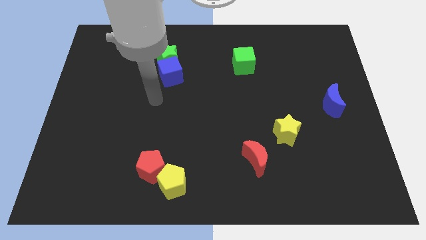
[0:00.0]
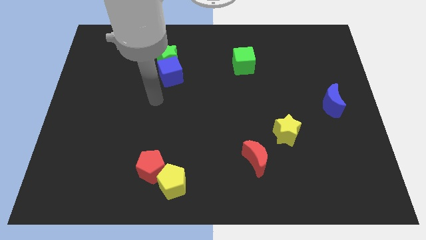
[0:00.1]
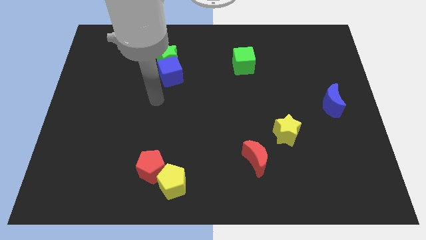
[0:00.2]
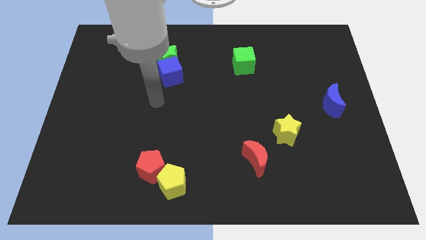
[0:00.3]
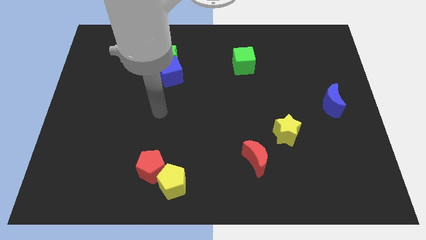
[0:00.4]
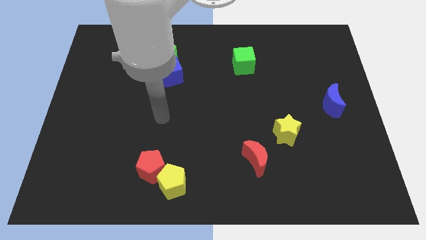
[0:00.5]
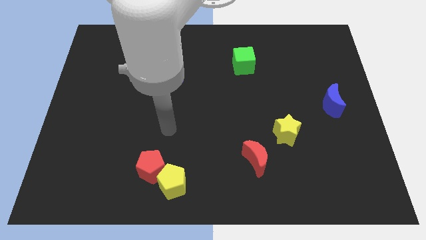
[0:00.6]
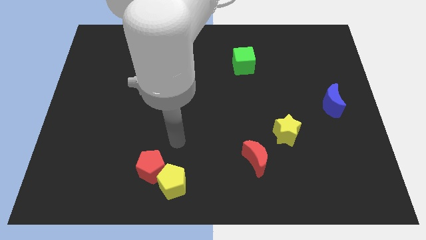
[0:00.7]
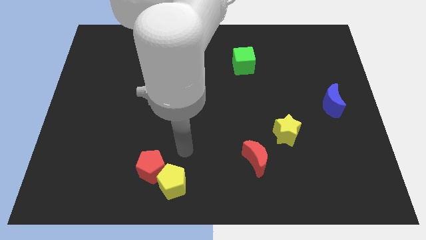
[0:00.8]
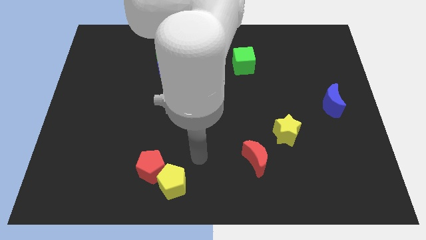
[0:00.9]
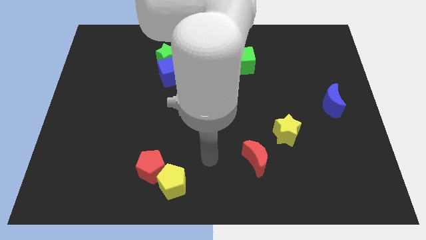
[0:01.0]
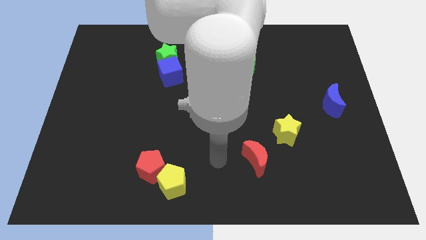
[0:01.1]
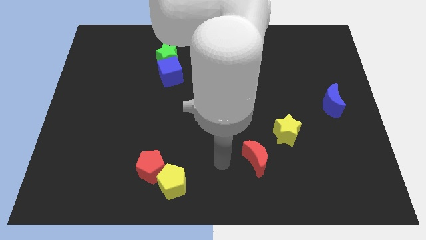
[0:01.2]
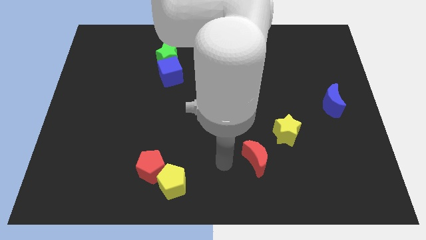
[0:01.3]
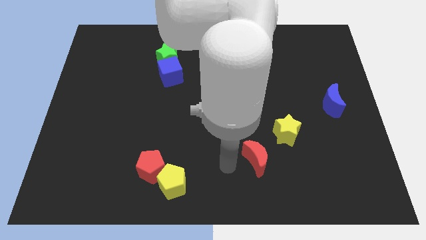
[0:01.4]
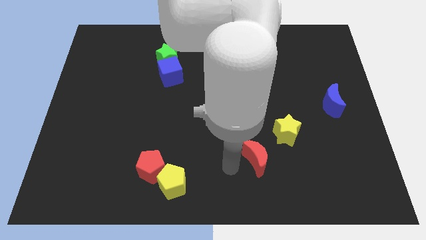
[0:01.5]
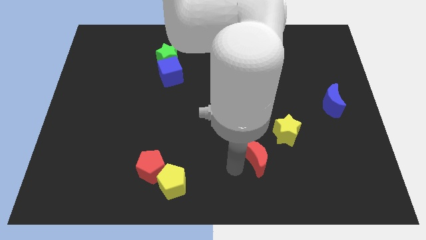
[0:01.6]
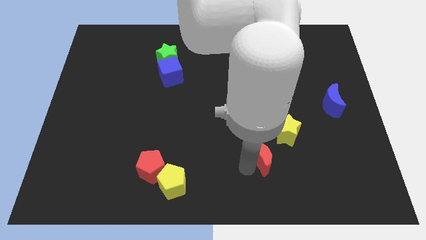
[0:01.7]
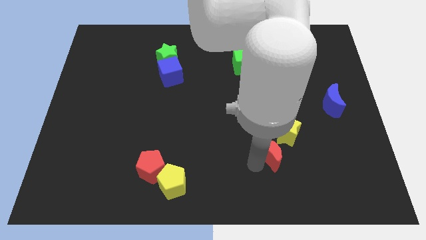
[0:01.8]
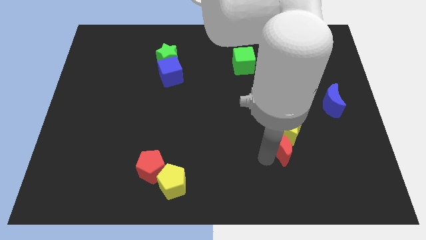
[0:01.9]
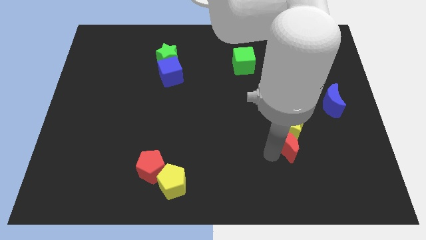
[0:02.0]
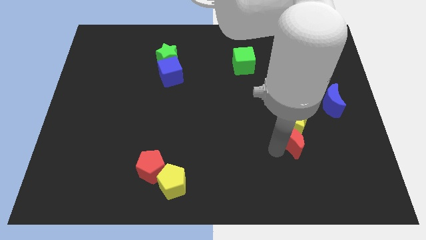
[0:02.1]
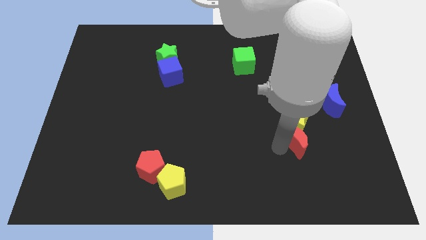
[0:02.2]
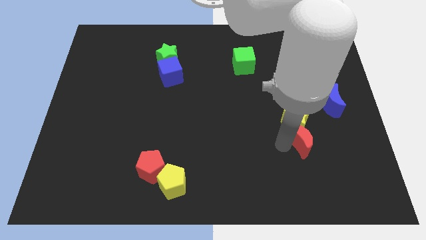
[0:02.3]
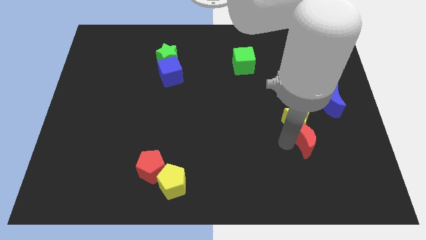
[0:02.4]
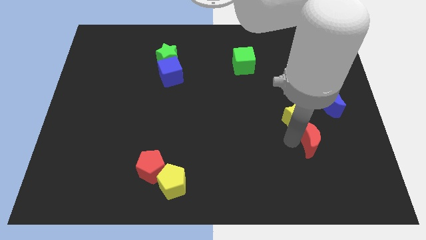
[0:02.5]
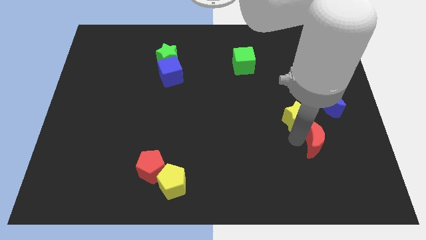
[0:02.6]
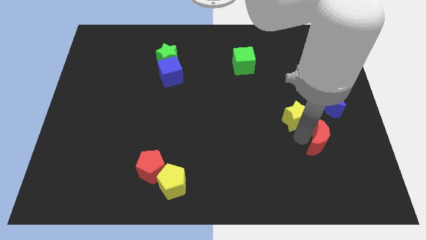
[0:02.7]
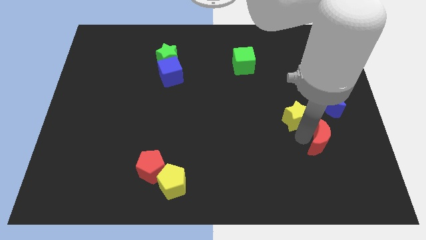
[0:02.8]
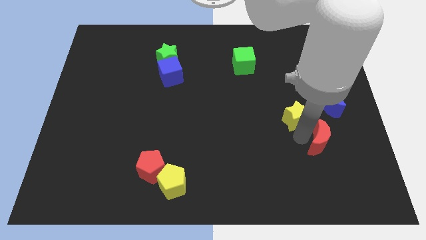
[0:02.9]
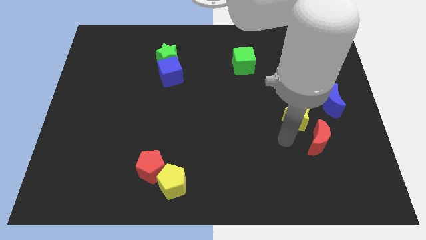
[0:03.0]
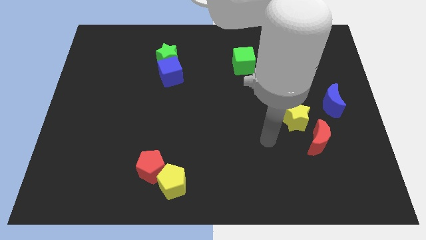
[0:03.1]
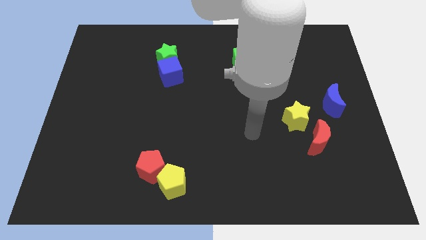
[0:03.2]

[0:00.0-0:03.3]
push red moon bottom right to yellow star

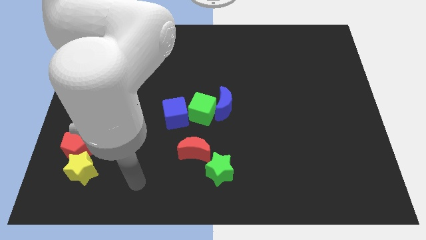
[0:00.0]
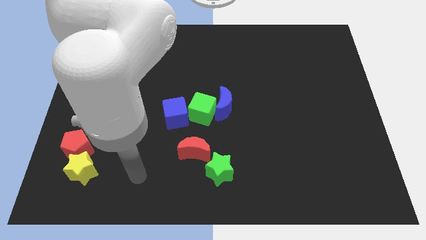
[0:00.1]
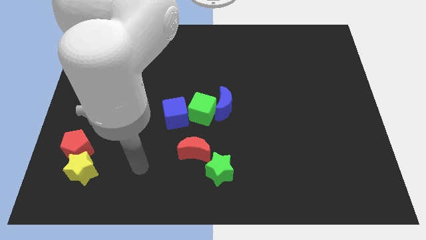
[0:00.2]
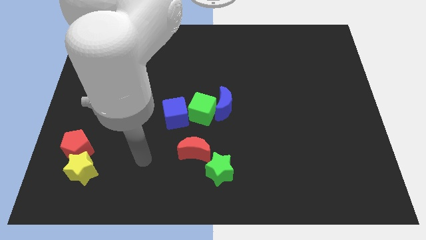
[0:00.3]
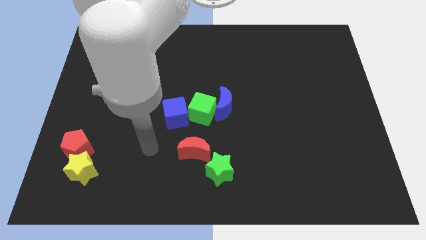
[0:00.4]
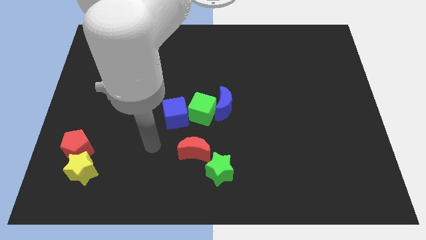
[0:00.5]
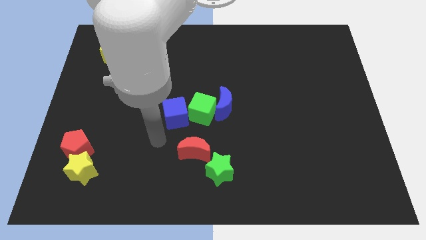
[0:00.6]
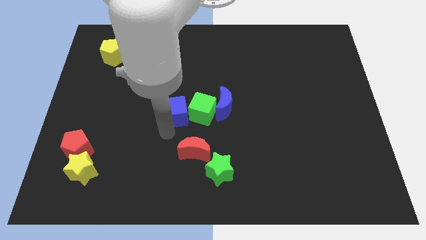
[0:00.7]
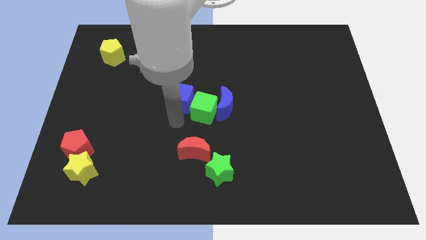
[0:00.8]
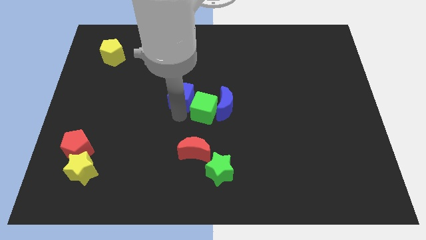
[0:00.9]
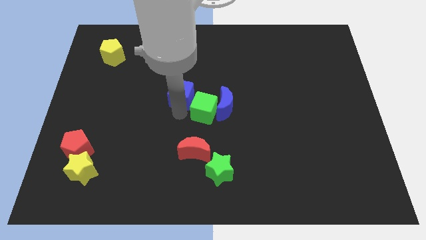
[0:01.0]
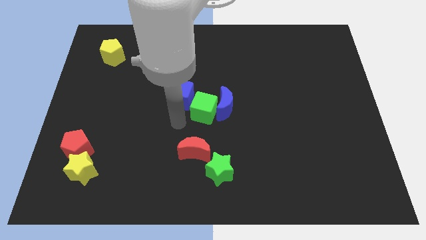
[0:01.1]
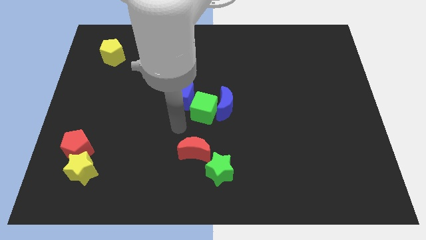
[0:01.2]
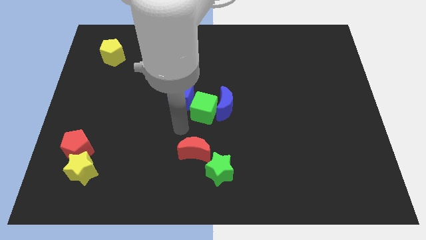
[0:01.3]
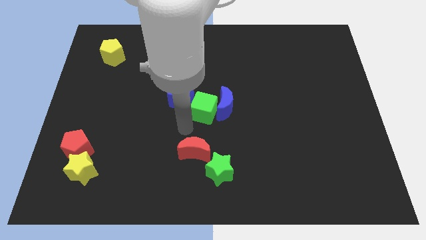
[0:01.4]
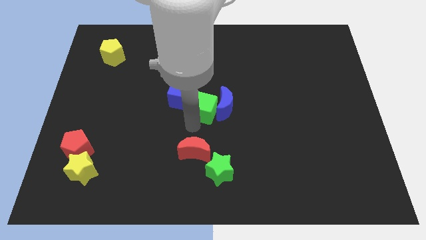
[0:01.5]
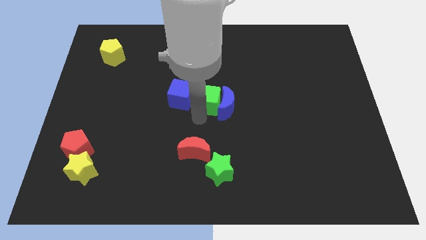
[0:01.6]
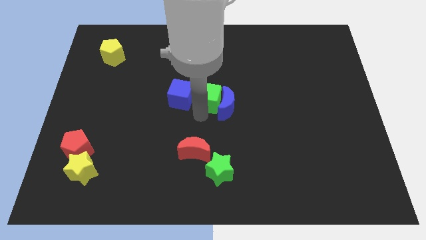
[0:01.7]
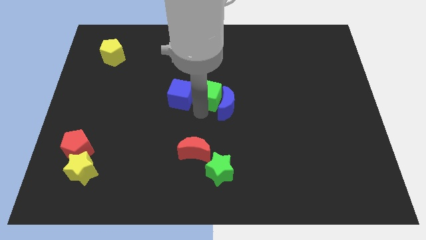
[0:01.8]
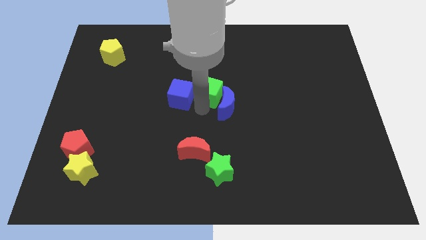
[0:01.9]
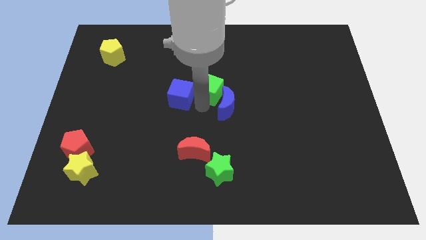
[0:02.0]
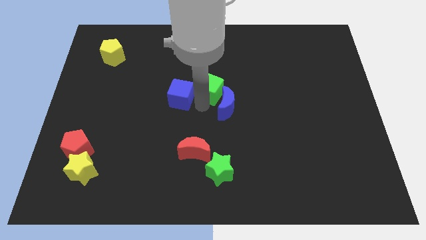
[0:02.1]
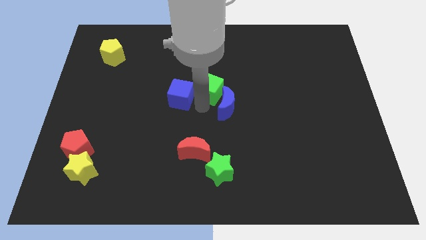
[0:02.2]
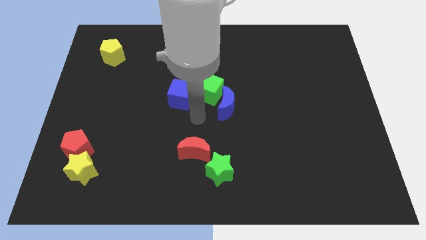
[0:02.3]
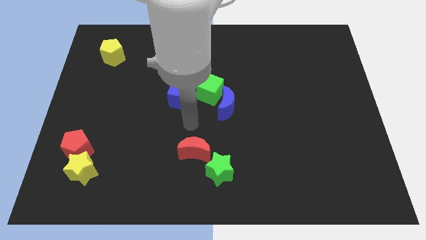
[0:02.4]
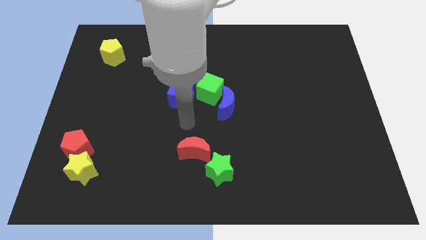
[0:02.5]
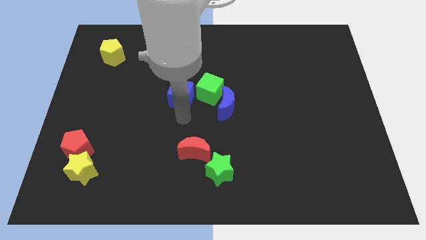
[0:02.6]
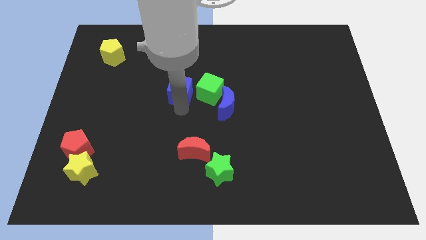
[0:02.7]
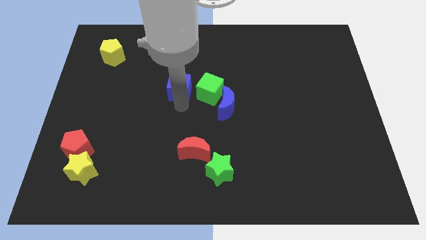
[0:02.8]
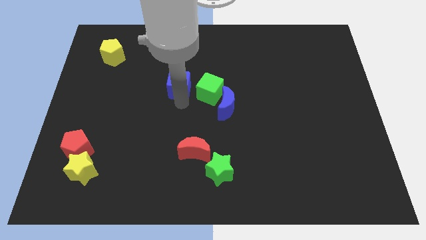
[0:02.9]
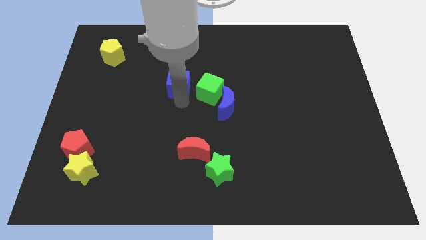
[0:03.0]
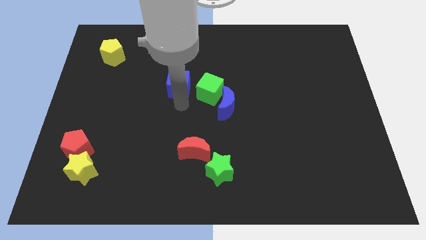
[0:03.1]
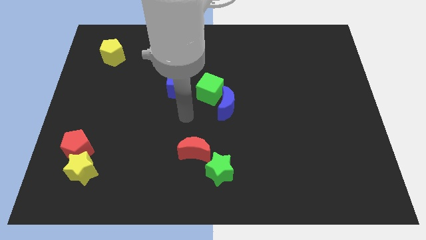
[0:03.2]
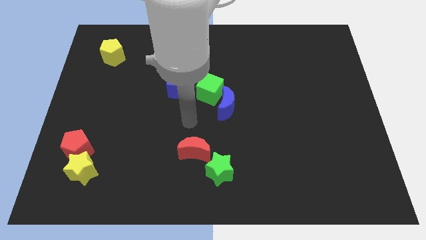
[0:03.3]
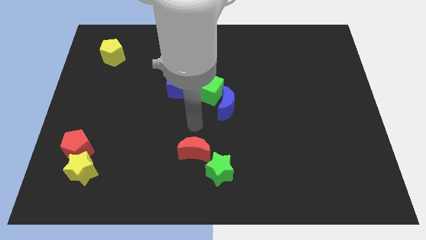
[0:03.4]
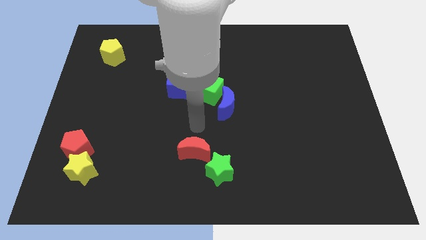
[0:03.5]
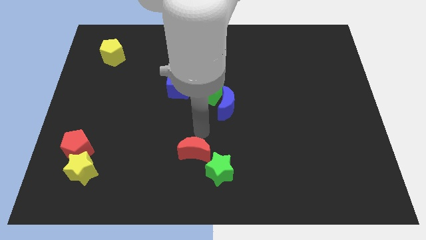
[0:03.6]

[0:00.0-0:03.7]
slightly move the blue cube and green cube towards the upside

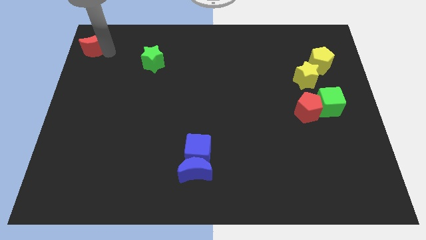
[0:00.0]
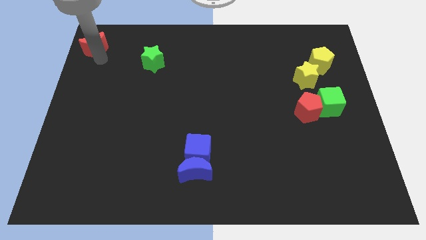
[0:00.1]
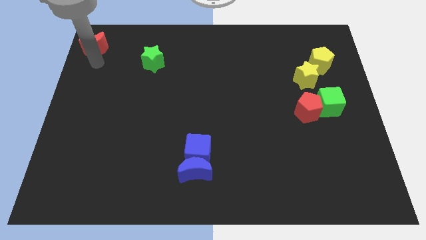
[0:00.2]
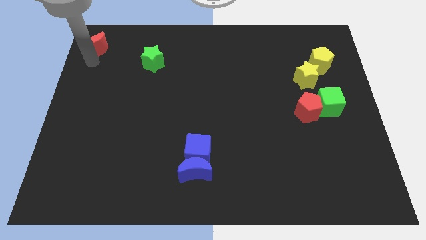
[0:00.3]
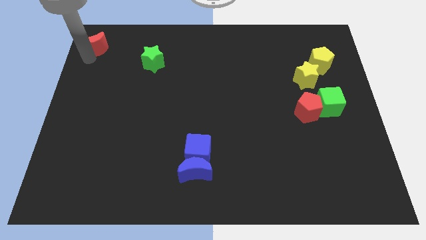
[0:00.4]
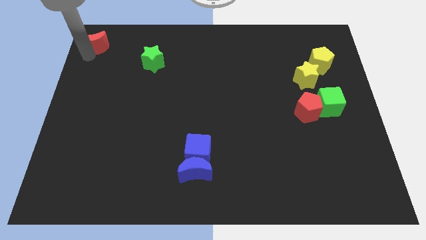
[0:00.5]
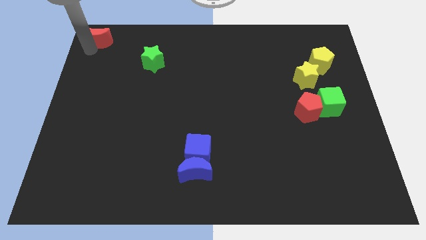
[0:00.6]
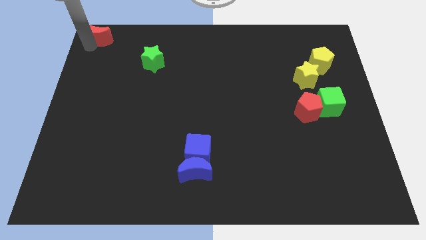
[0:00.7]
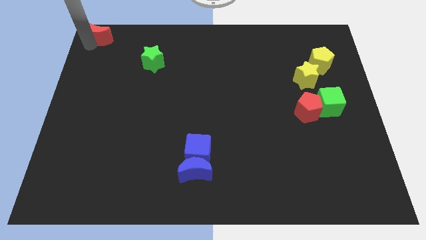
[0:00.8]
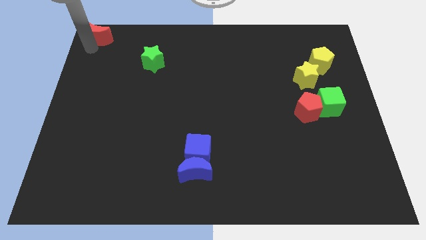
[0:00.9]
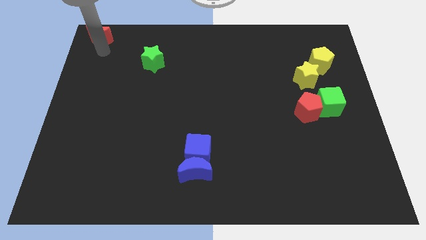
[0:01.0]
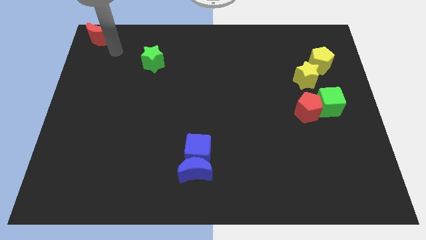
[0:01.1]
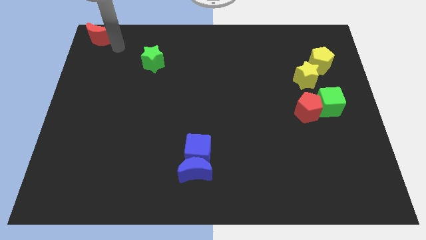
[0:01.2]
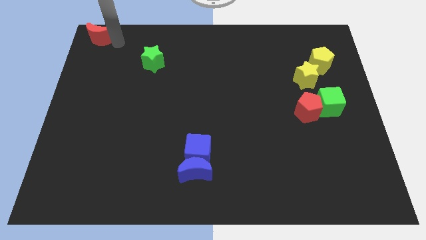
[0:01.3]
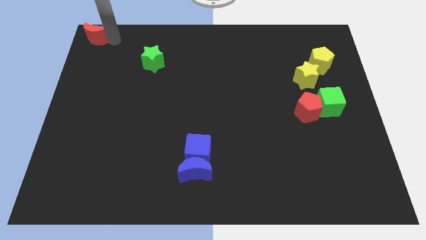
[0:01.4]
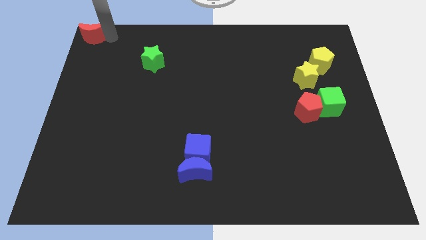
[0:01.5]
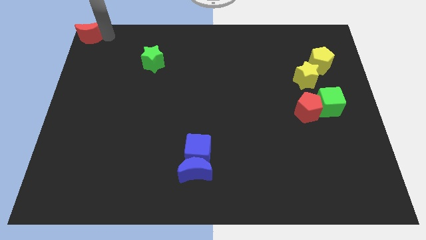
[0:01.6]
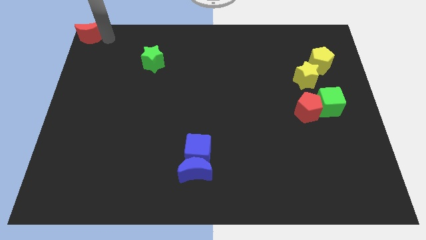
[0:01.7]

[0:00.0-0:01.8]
slide the red crescent to the top left corner of the table

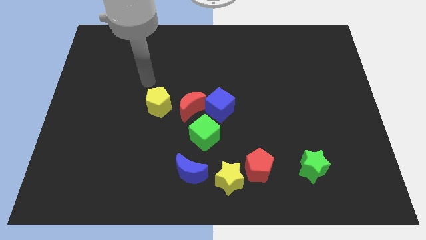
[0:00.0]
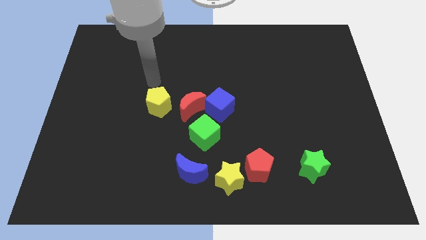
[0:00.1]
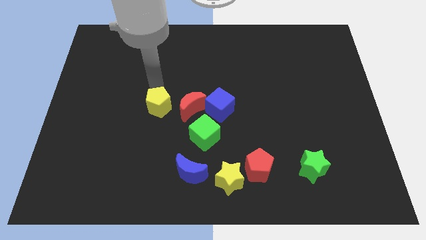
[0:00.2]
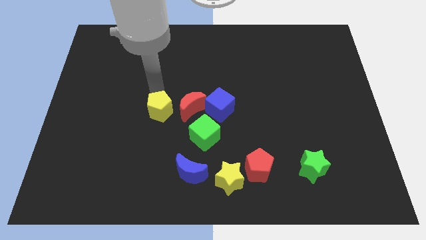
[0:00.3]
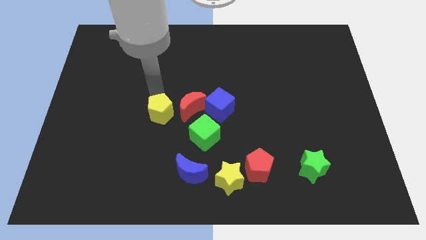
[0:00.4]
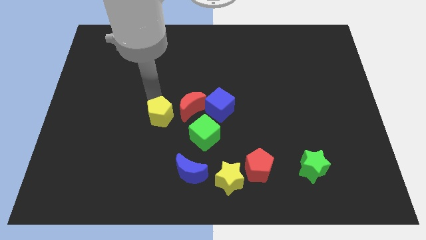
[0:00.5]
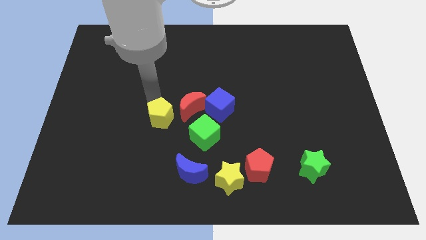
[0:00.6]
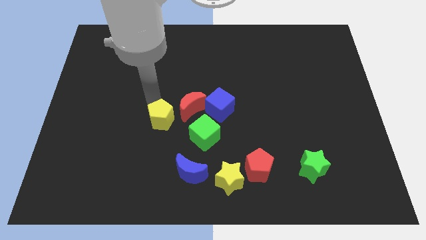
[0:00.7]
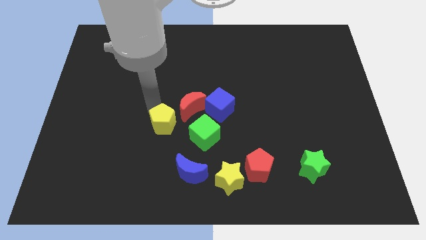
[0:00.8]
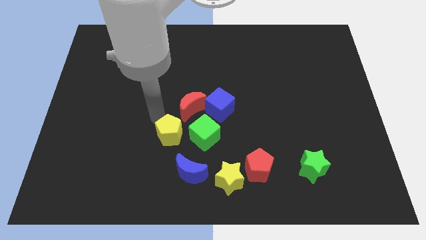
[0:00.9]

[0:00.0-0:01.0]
place the yellow pentagon at the bottom of green cube
